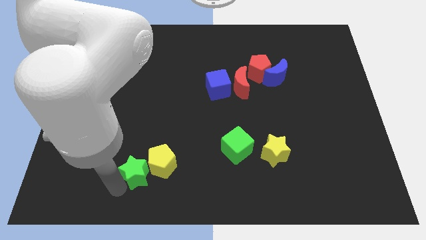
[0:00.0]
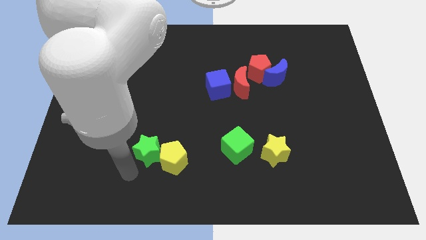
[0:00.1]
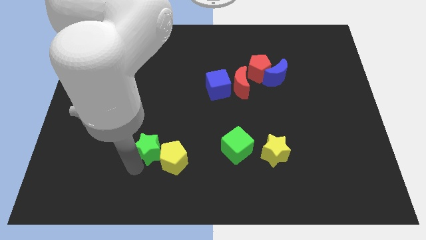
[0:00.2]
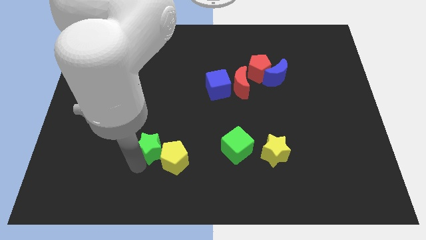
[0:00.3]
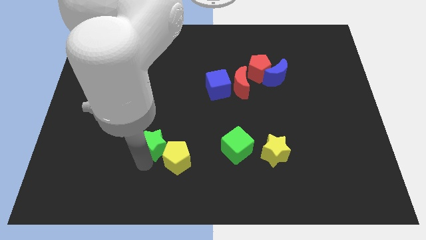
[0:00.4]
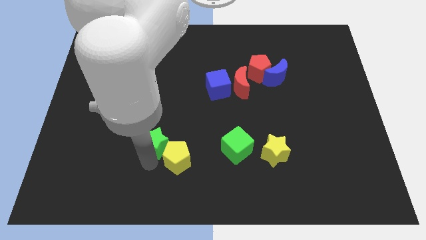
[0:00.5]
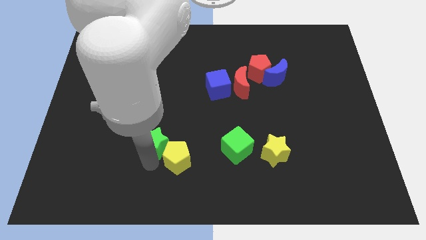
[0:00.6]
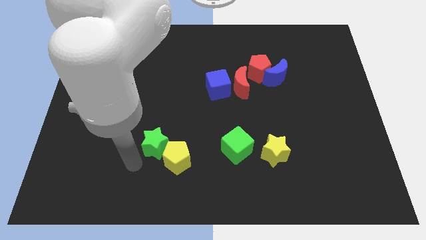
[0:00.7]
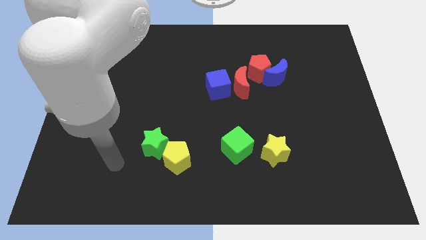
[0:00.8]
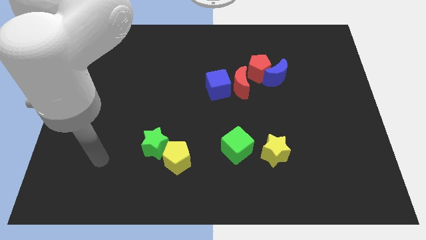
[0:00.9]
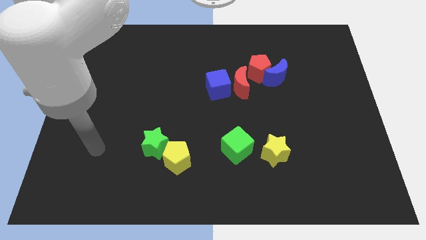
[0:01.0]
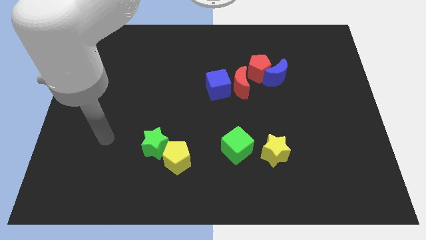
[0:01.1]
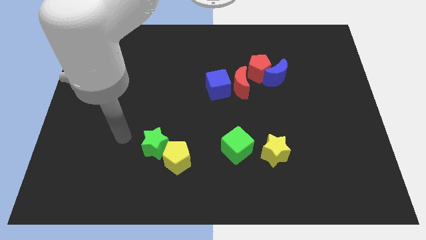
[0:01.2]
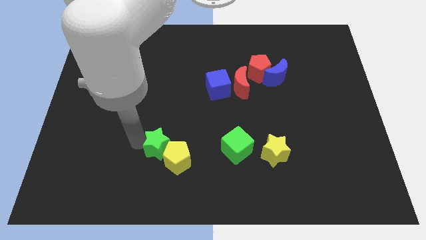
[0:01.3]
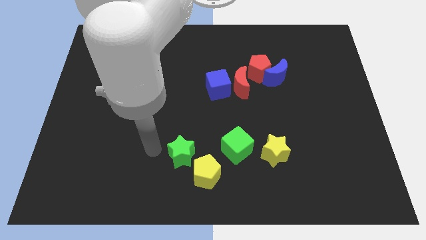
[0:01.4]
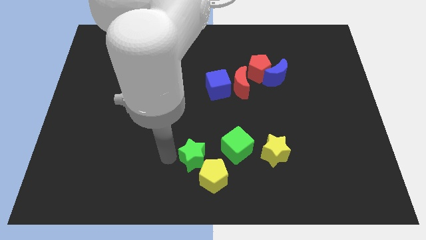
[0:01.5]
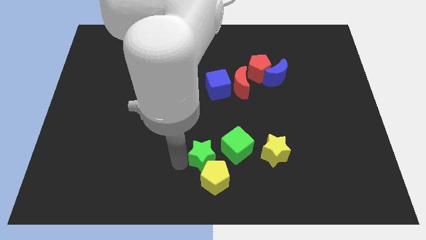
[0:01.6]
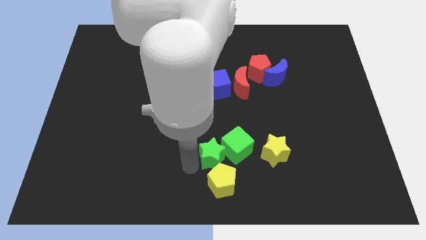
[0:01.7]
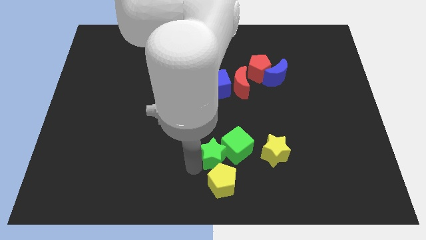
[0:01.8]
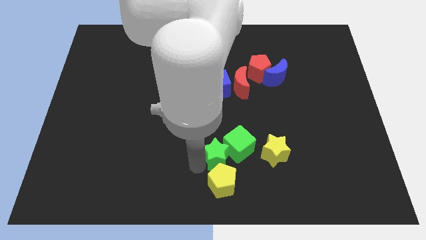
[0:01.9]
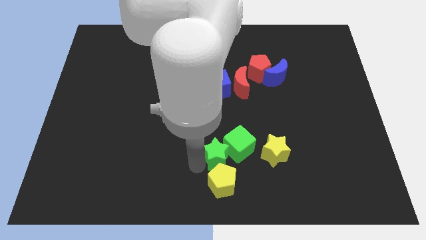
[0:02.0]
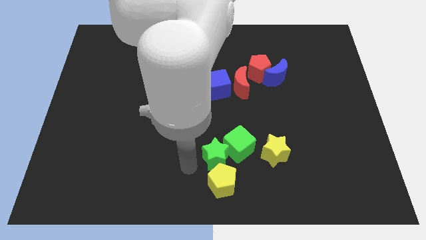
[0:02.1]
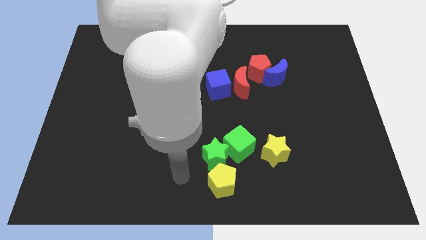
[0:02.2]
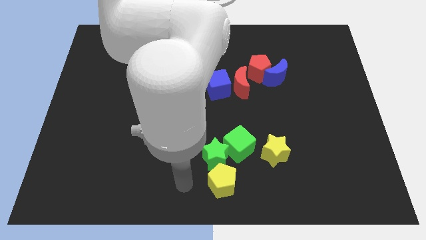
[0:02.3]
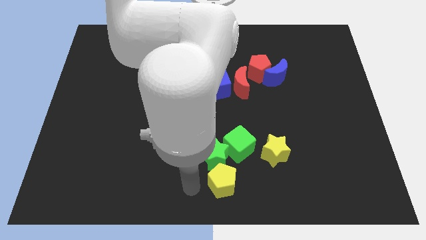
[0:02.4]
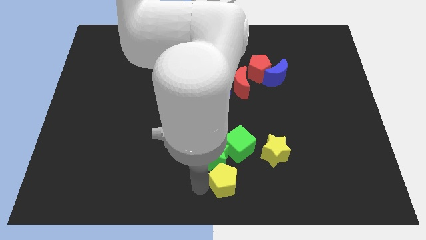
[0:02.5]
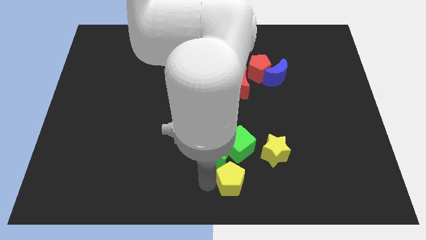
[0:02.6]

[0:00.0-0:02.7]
push green star beside green cube

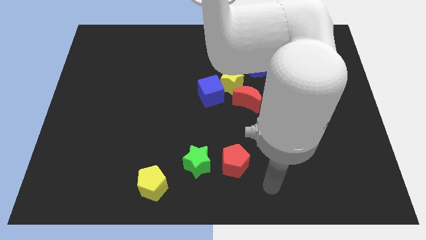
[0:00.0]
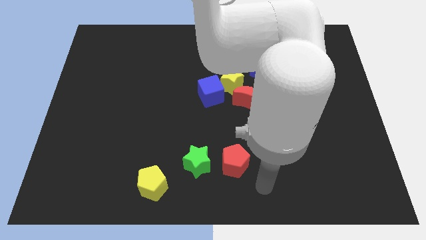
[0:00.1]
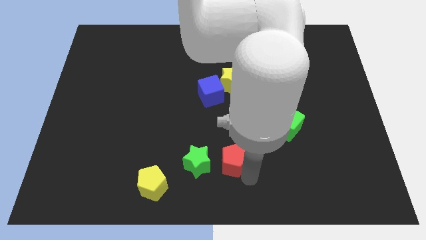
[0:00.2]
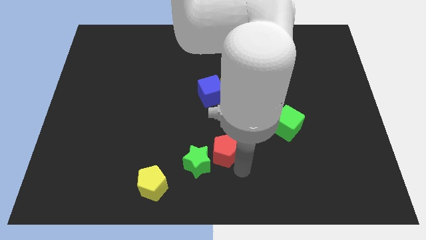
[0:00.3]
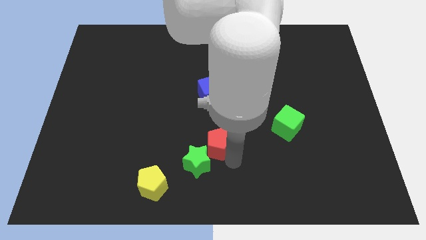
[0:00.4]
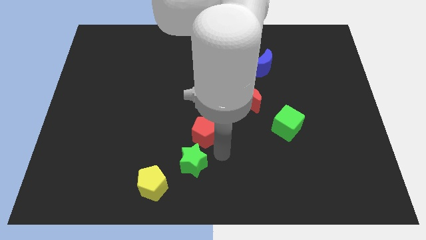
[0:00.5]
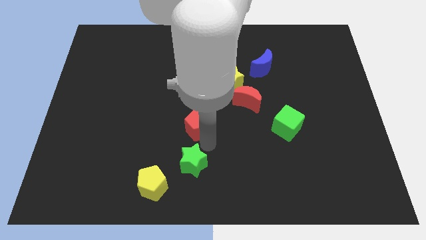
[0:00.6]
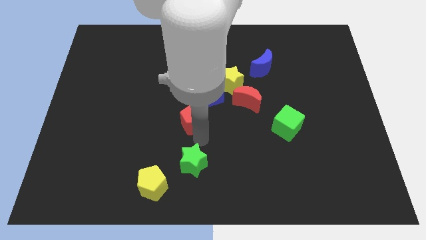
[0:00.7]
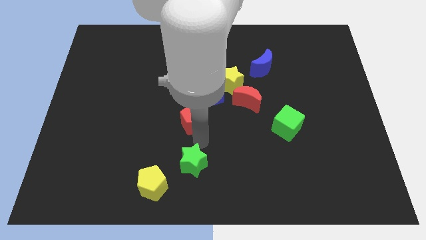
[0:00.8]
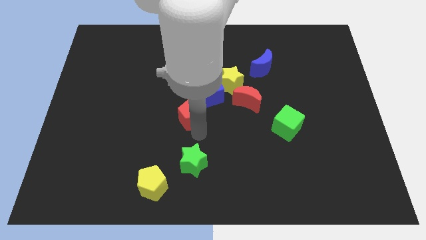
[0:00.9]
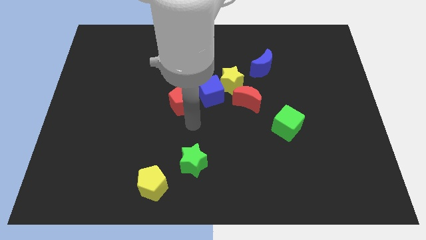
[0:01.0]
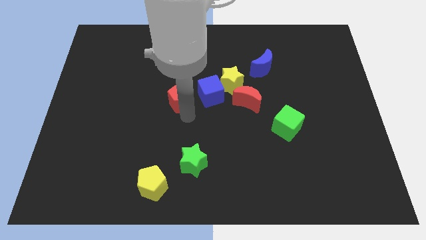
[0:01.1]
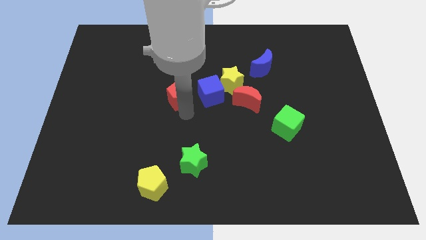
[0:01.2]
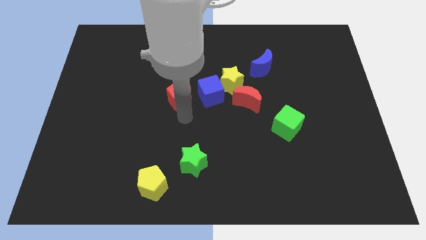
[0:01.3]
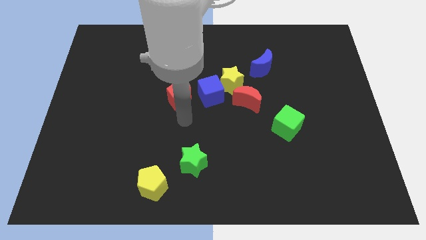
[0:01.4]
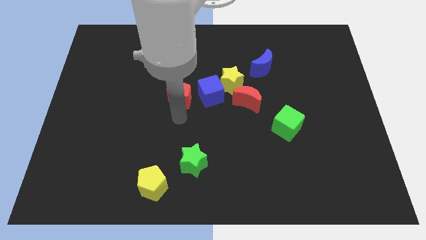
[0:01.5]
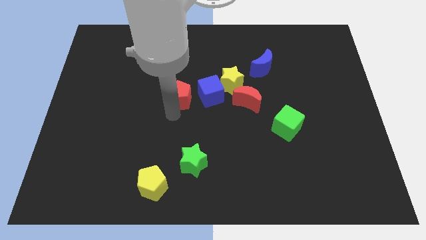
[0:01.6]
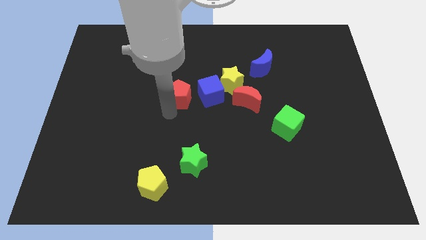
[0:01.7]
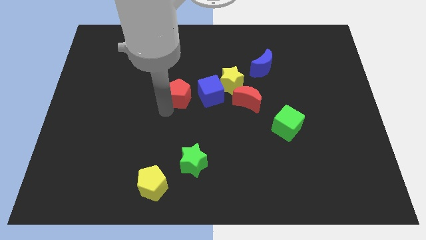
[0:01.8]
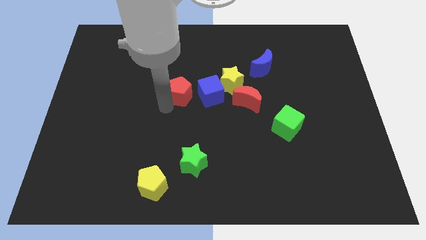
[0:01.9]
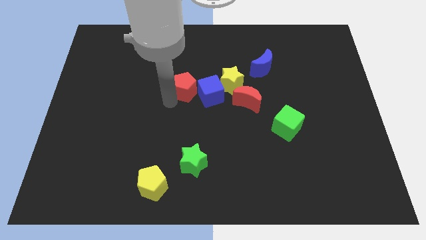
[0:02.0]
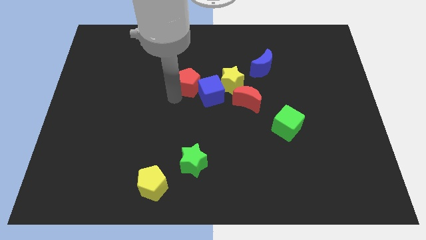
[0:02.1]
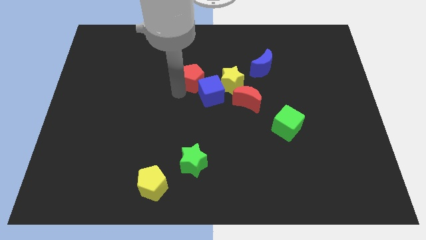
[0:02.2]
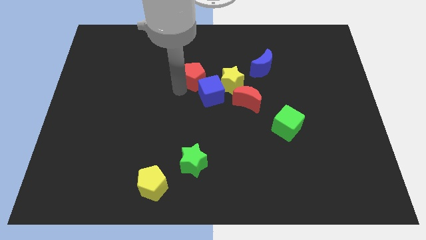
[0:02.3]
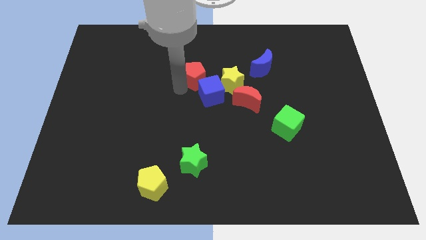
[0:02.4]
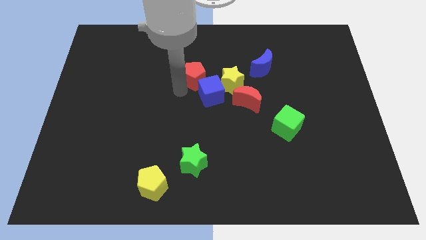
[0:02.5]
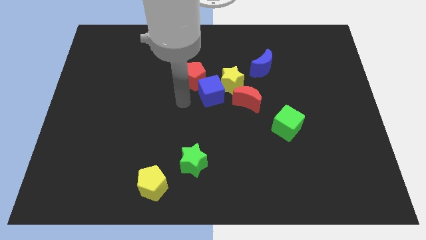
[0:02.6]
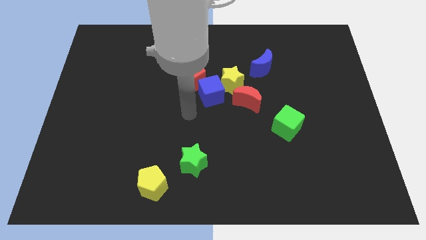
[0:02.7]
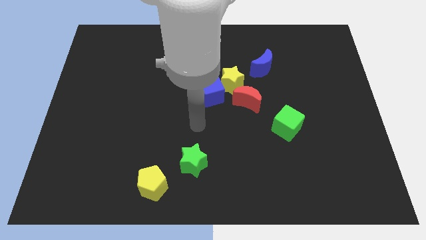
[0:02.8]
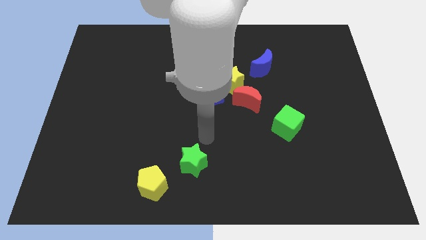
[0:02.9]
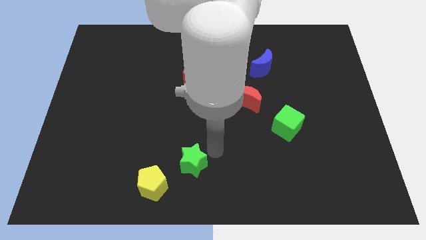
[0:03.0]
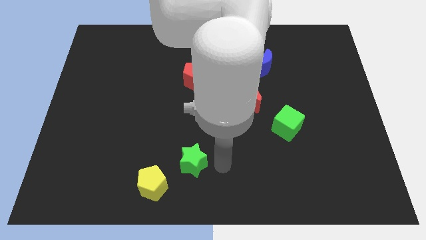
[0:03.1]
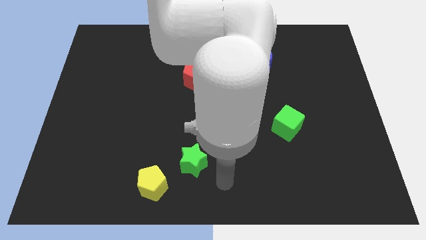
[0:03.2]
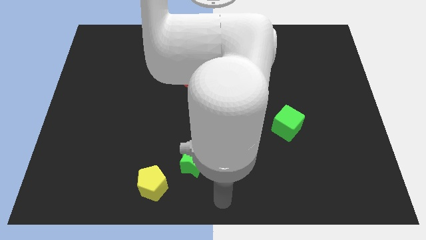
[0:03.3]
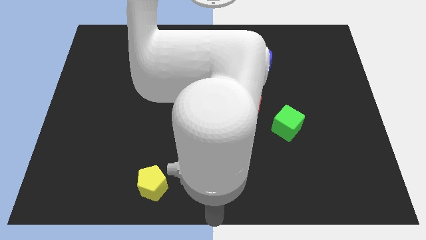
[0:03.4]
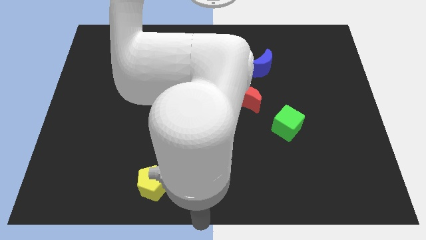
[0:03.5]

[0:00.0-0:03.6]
move red pentagon towards the blue cube

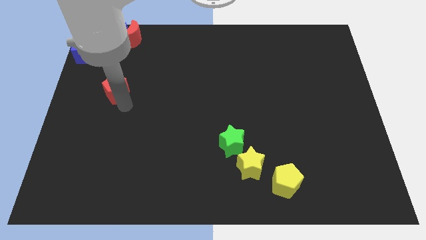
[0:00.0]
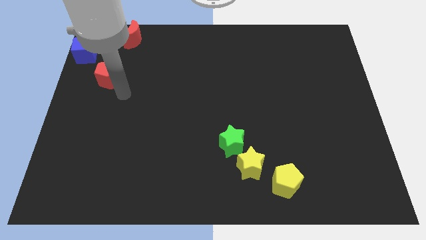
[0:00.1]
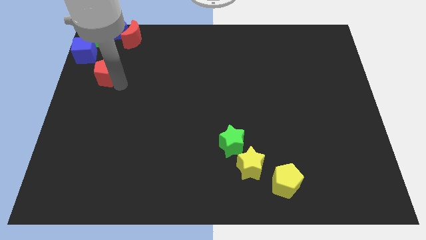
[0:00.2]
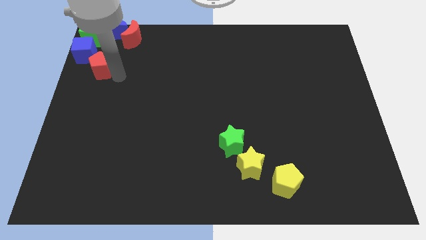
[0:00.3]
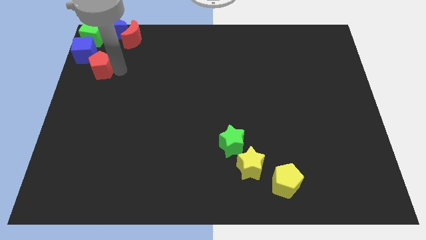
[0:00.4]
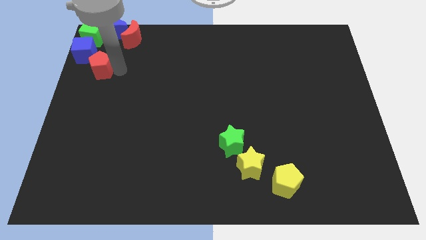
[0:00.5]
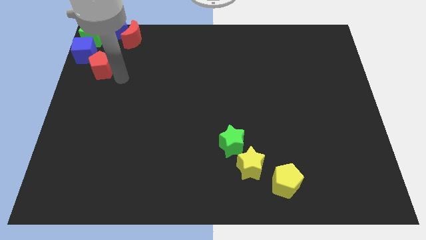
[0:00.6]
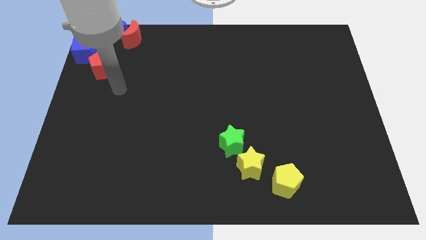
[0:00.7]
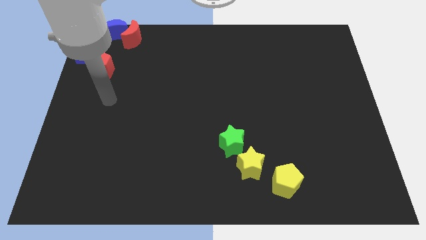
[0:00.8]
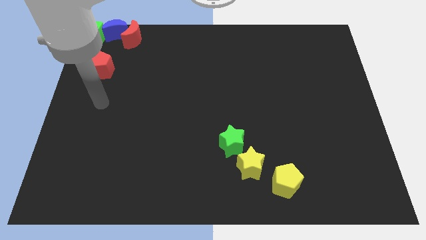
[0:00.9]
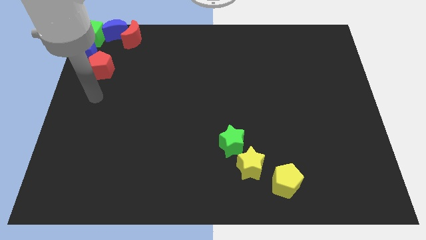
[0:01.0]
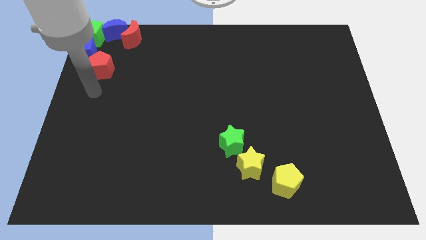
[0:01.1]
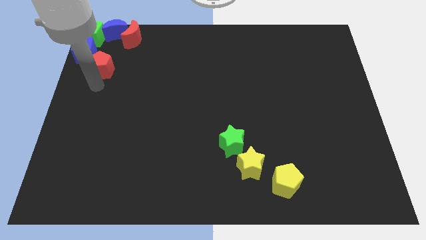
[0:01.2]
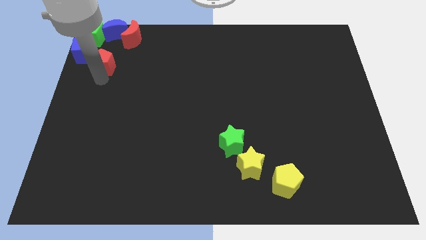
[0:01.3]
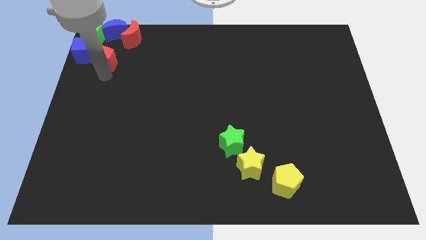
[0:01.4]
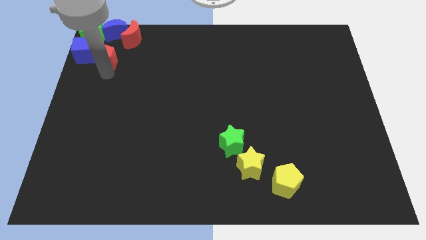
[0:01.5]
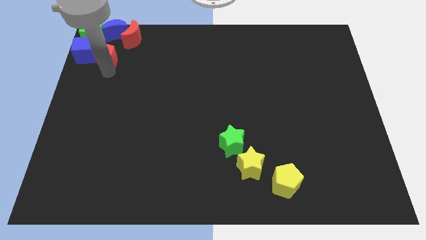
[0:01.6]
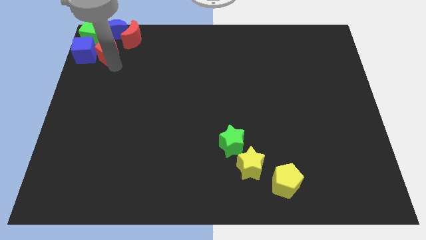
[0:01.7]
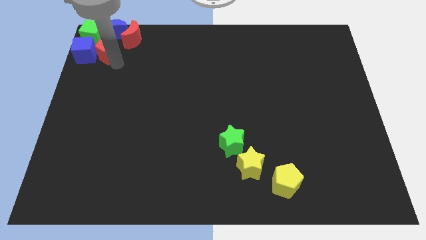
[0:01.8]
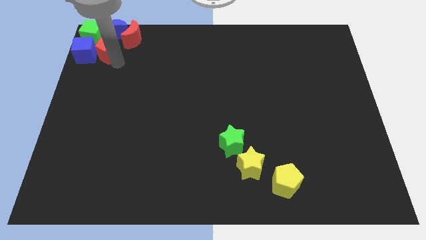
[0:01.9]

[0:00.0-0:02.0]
put the red pentagon on the right side of the blue cube

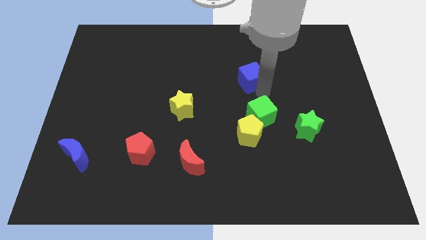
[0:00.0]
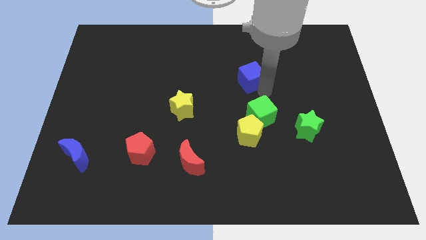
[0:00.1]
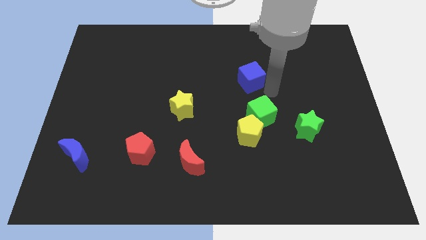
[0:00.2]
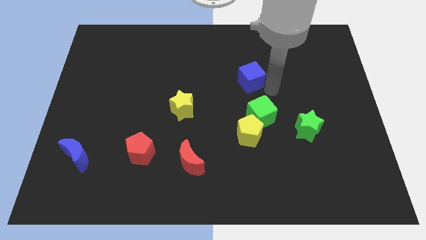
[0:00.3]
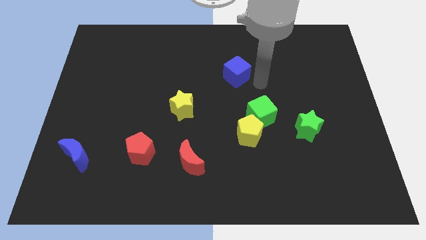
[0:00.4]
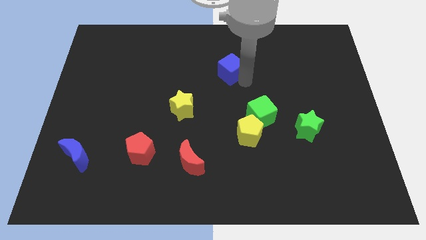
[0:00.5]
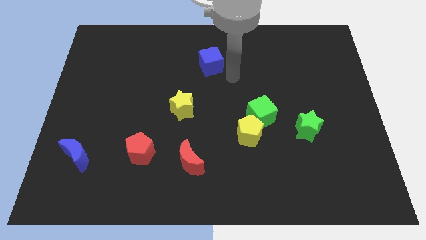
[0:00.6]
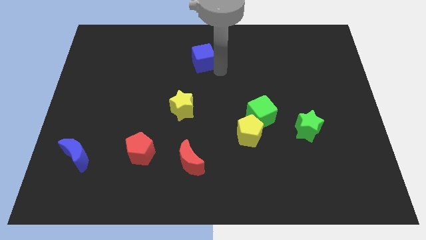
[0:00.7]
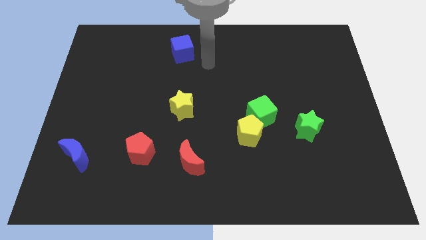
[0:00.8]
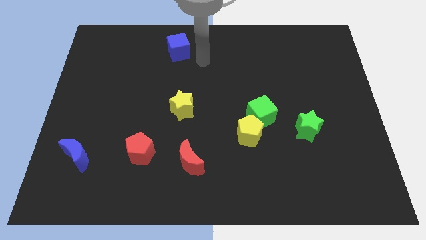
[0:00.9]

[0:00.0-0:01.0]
place the blue cube towards the top center of the board
